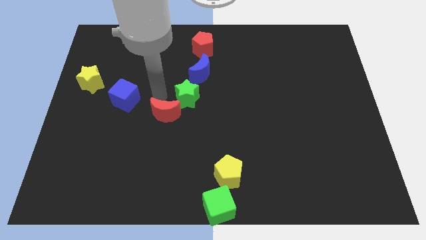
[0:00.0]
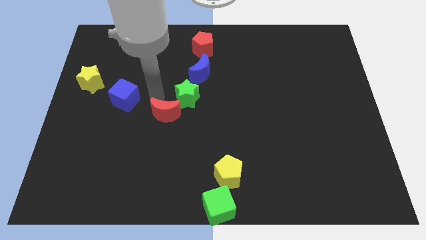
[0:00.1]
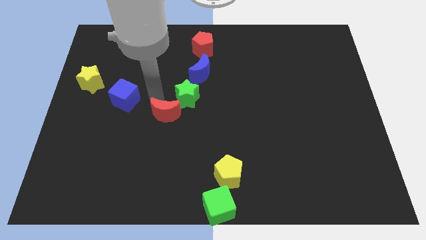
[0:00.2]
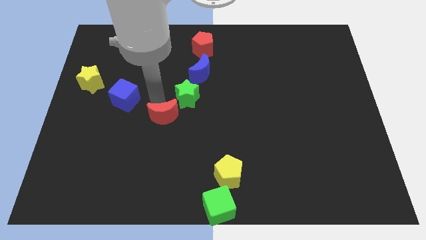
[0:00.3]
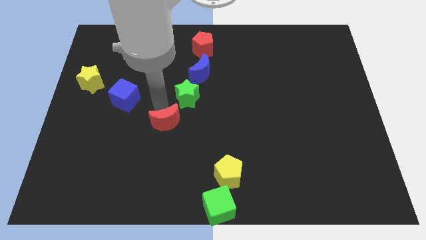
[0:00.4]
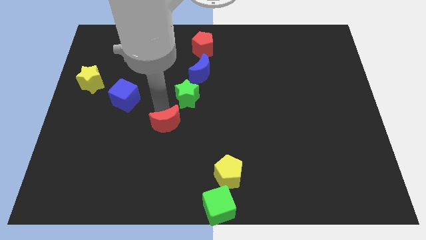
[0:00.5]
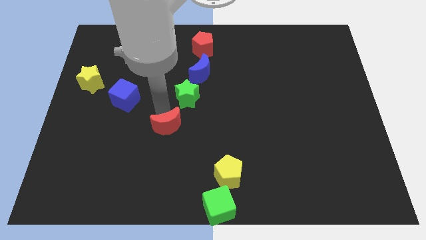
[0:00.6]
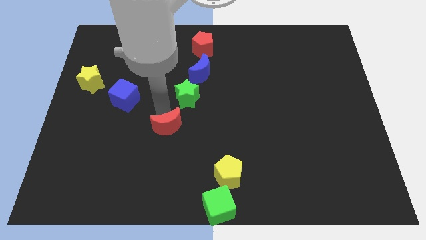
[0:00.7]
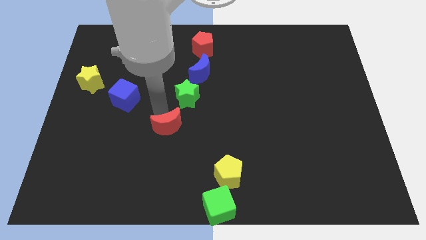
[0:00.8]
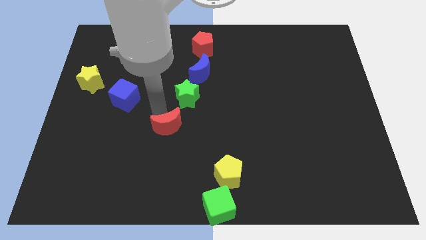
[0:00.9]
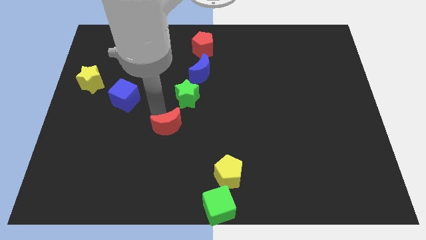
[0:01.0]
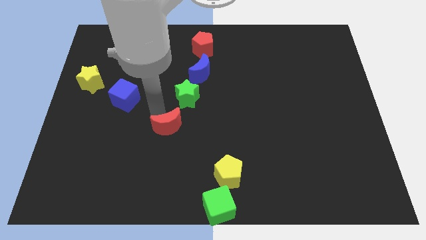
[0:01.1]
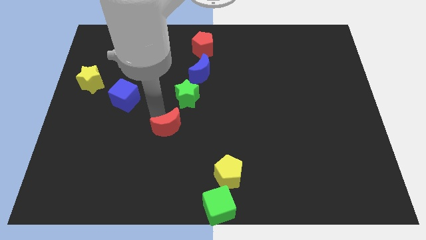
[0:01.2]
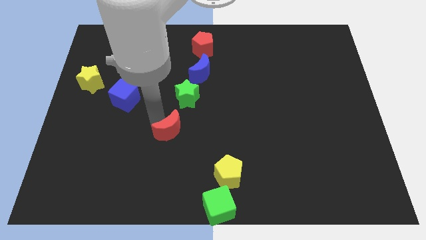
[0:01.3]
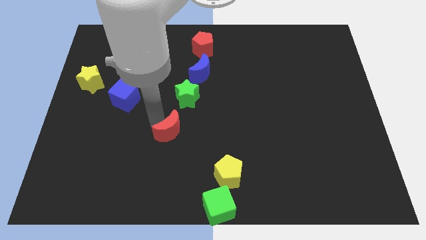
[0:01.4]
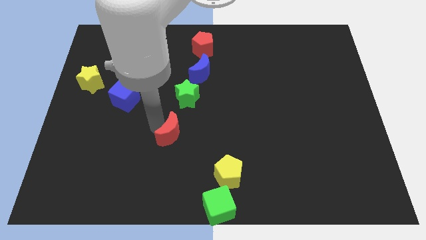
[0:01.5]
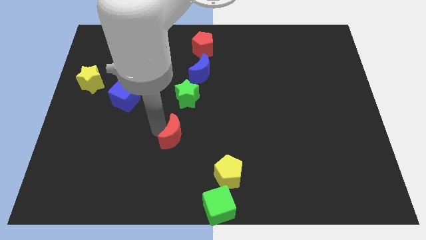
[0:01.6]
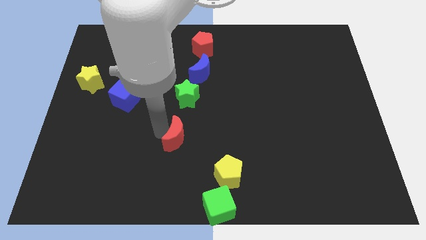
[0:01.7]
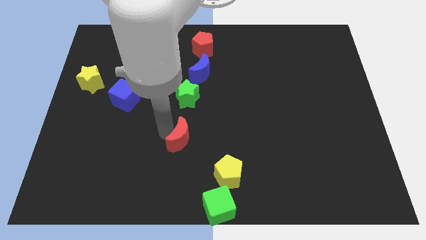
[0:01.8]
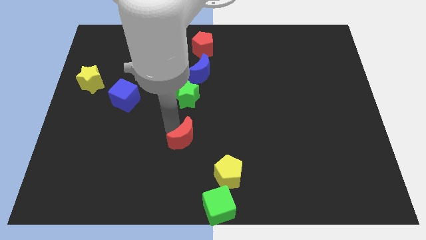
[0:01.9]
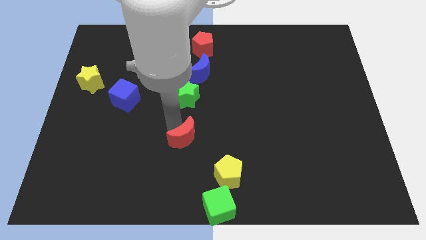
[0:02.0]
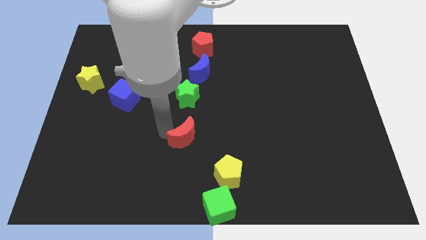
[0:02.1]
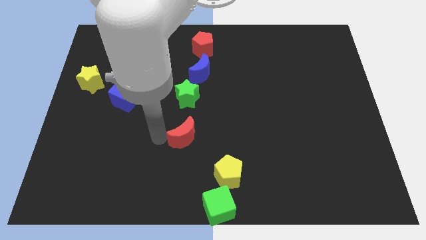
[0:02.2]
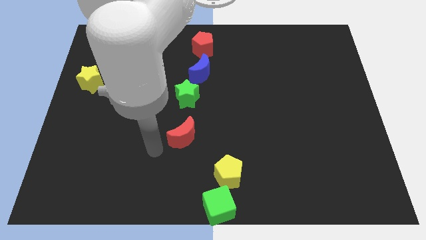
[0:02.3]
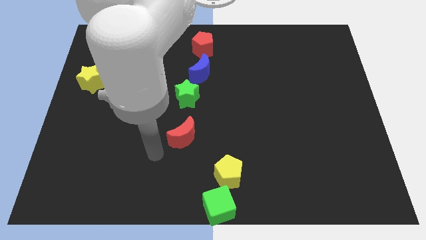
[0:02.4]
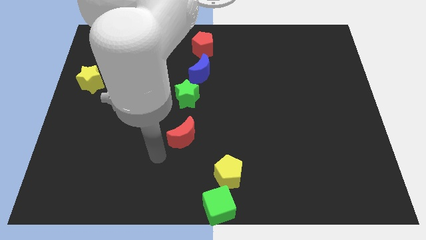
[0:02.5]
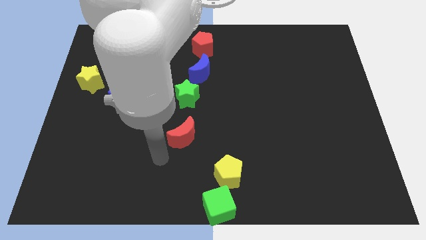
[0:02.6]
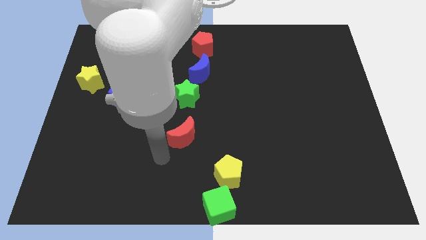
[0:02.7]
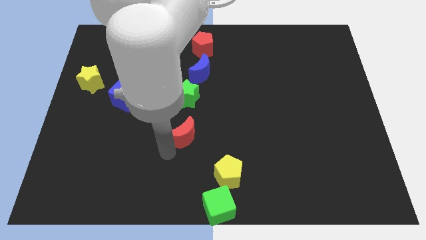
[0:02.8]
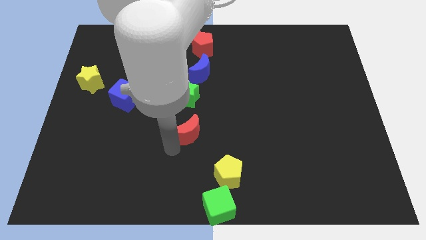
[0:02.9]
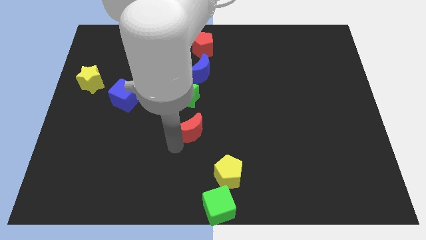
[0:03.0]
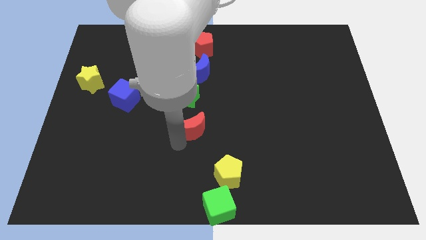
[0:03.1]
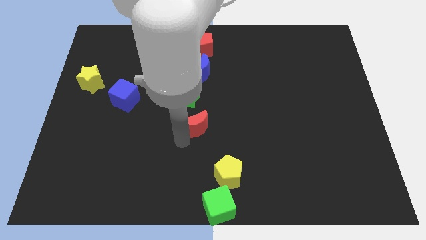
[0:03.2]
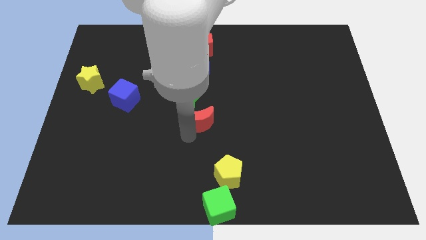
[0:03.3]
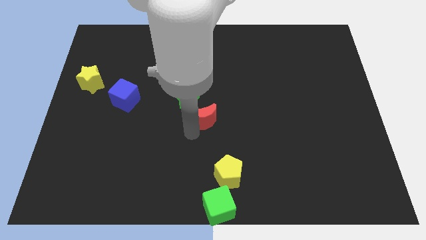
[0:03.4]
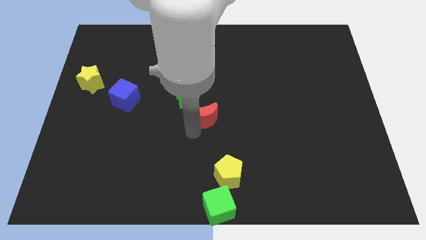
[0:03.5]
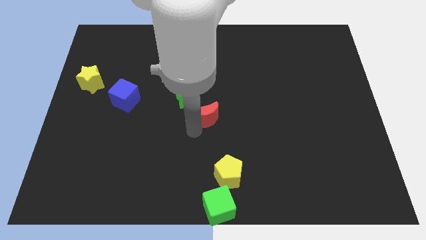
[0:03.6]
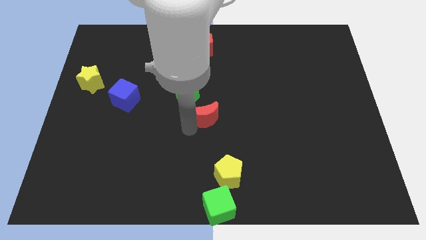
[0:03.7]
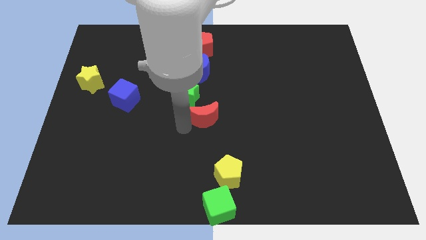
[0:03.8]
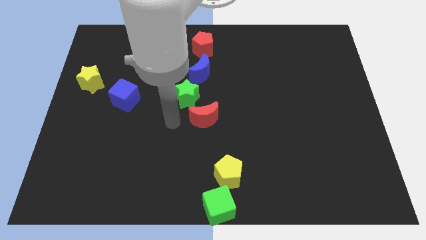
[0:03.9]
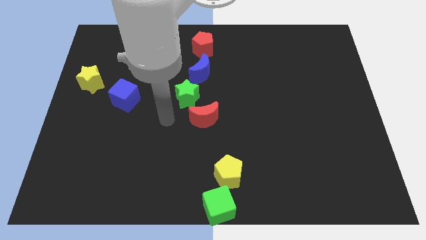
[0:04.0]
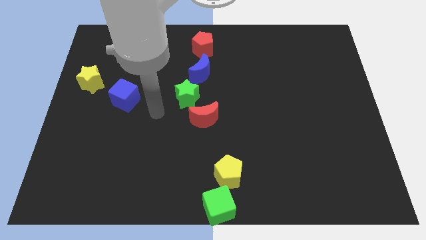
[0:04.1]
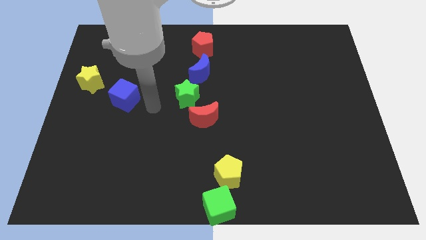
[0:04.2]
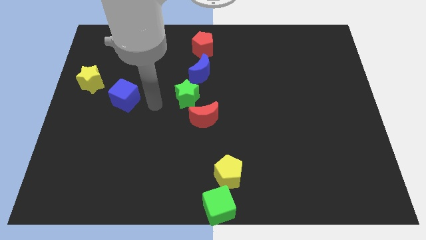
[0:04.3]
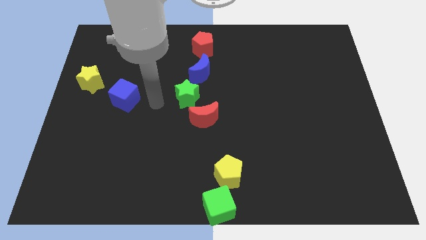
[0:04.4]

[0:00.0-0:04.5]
place red moon to the bottom right of green star

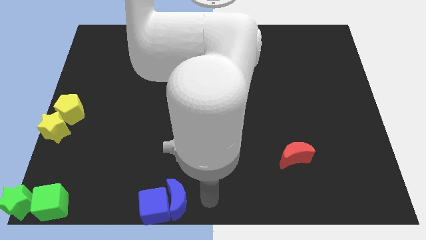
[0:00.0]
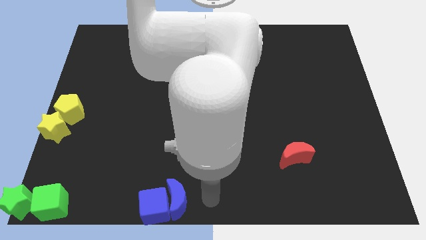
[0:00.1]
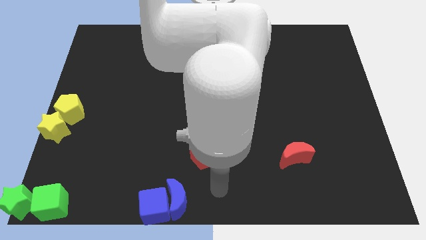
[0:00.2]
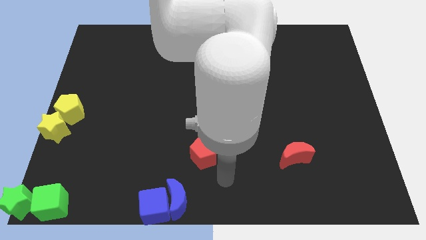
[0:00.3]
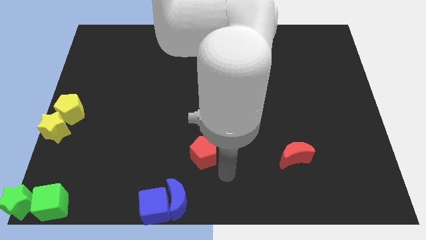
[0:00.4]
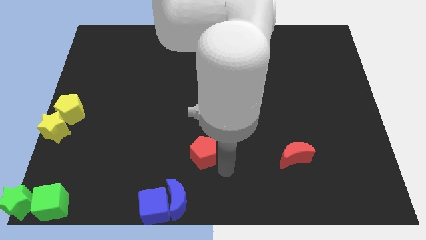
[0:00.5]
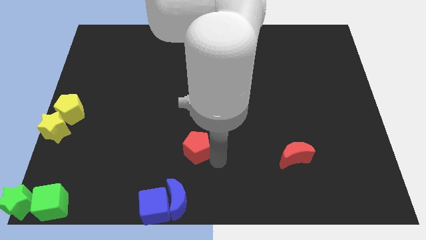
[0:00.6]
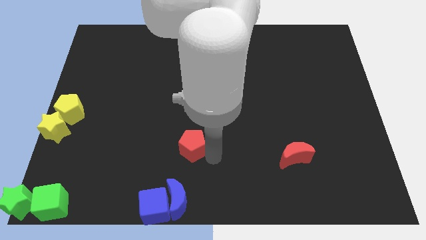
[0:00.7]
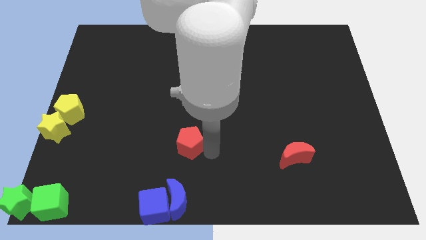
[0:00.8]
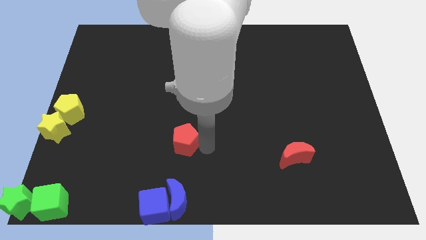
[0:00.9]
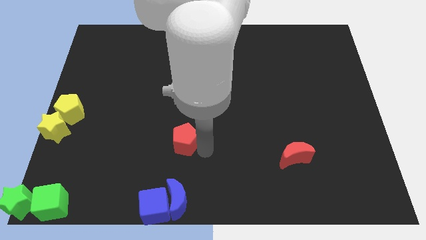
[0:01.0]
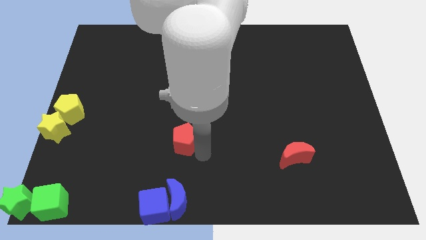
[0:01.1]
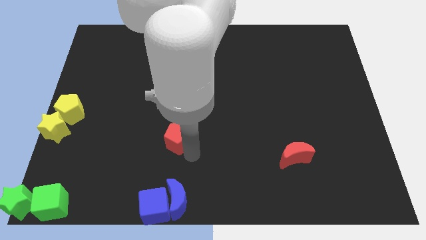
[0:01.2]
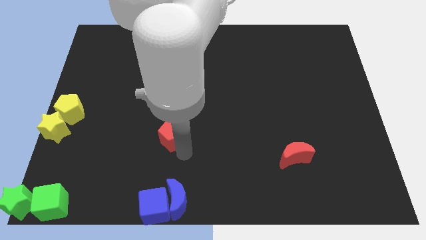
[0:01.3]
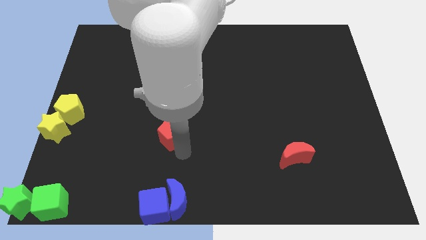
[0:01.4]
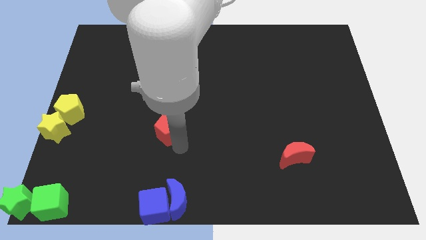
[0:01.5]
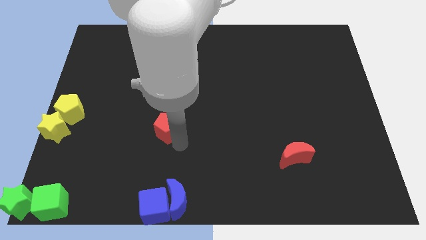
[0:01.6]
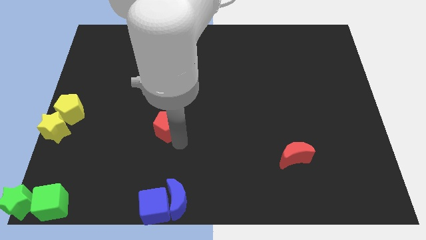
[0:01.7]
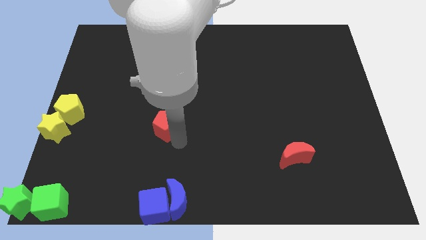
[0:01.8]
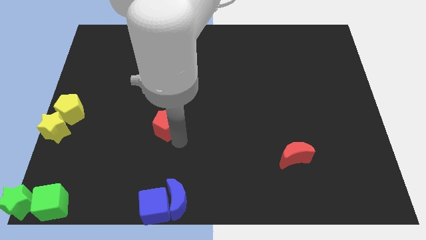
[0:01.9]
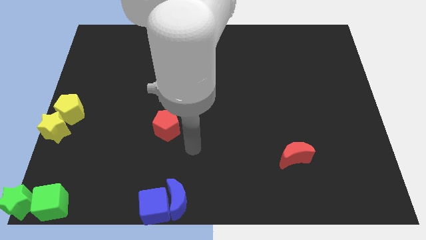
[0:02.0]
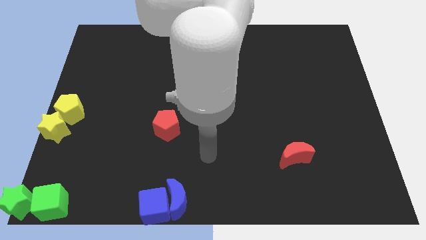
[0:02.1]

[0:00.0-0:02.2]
place the red pentagon to the top of blue blocks

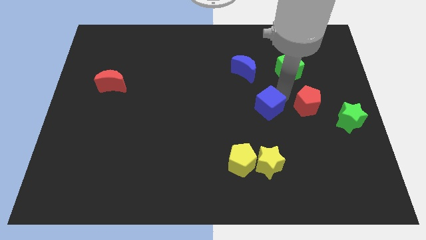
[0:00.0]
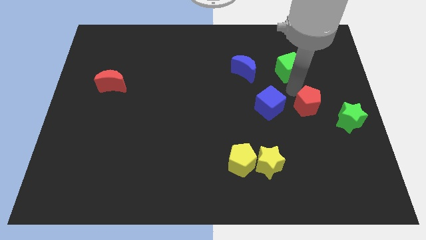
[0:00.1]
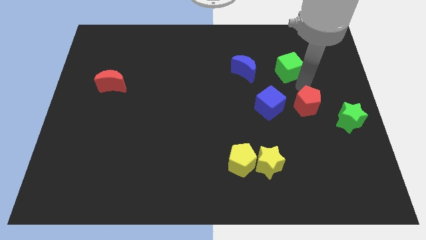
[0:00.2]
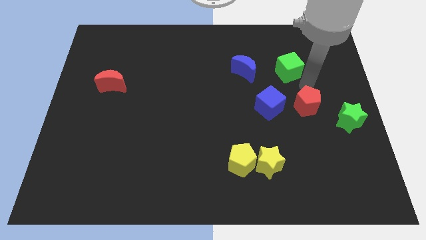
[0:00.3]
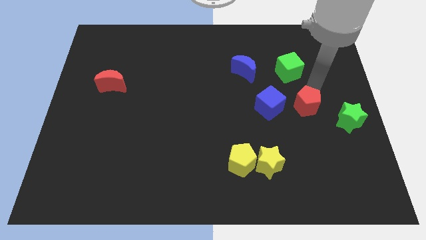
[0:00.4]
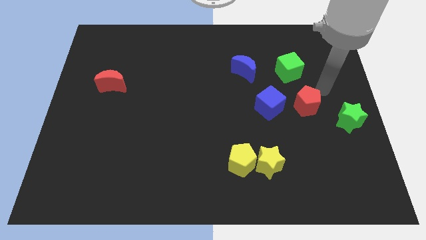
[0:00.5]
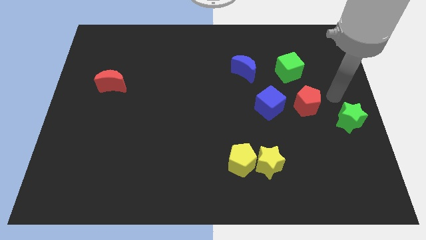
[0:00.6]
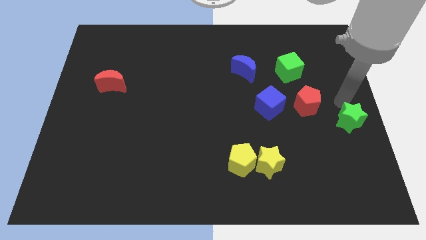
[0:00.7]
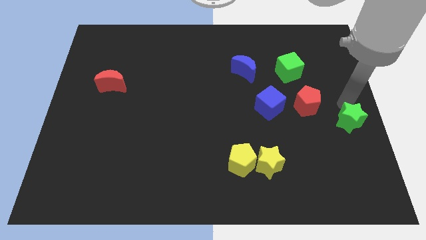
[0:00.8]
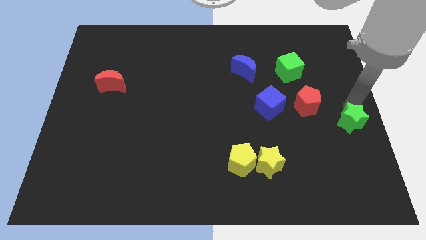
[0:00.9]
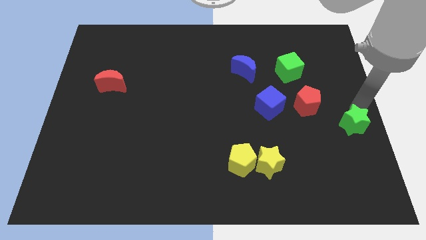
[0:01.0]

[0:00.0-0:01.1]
move your arm away from the blue cube

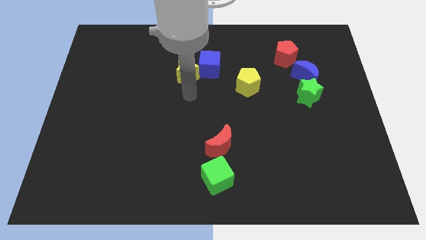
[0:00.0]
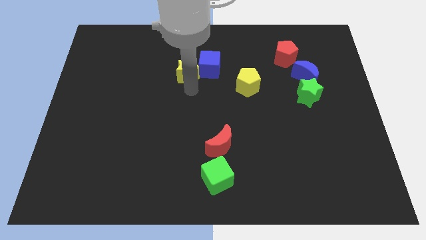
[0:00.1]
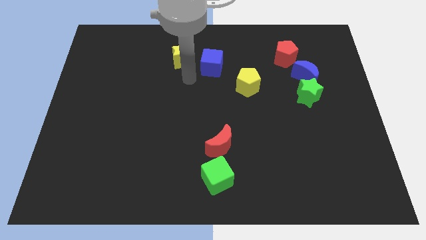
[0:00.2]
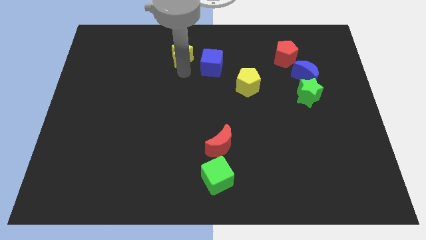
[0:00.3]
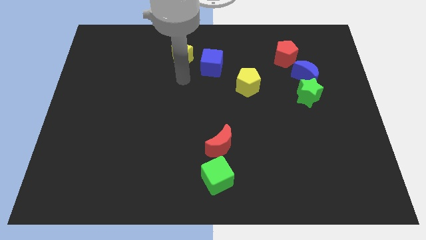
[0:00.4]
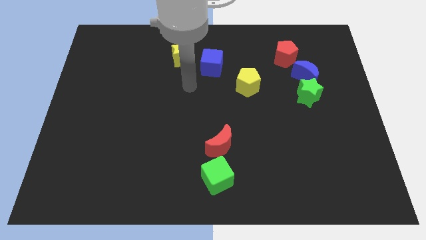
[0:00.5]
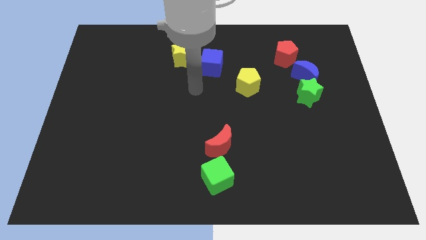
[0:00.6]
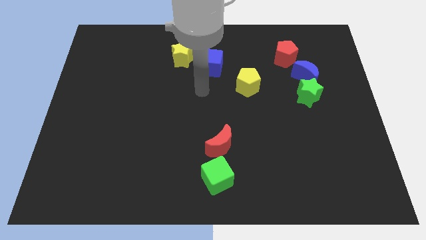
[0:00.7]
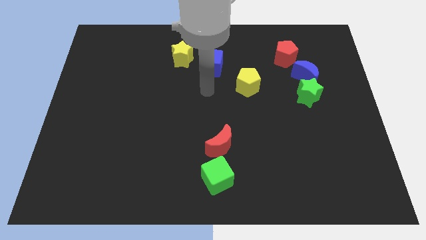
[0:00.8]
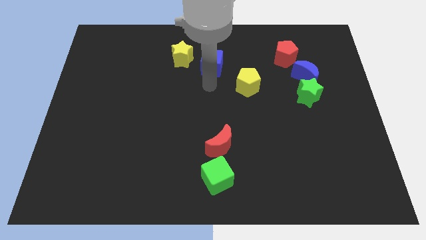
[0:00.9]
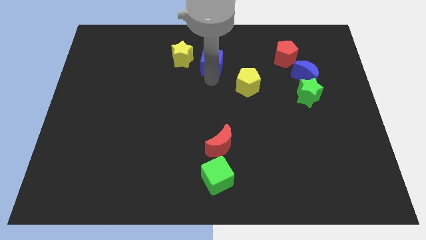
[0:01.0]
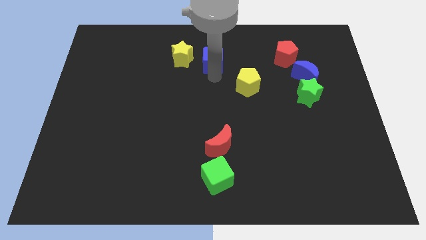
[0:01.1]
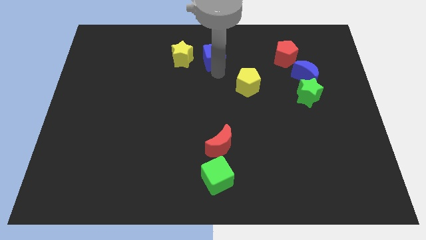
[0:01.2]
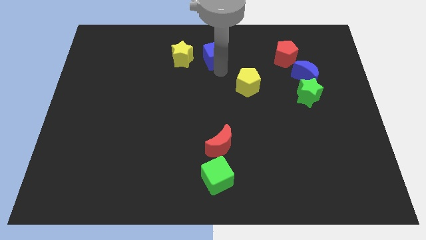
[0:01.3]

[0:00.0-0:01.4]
slide the blue cube and yellow star to the top of the board
